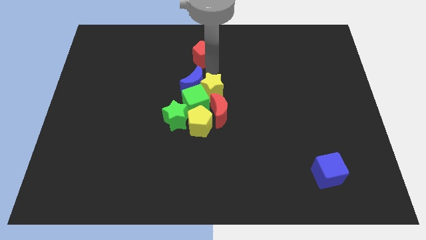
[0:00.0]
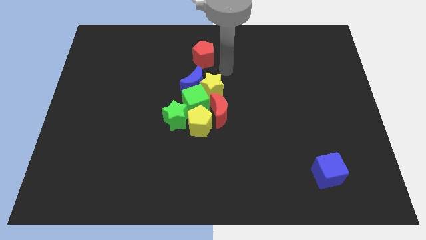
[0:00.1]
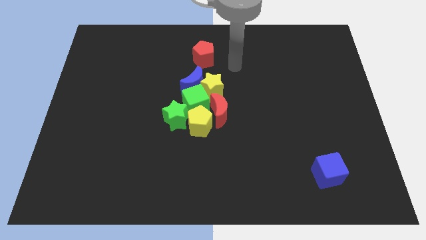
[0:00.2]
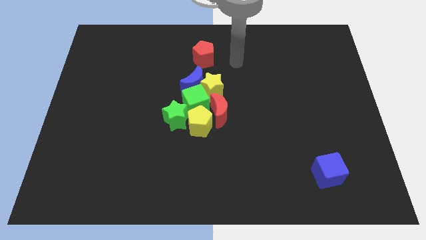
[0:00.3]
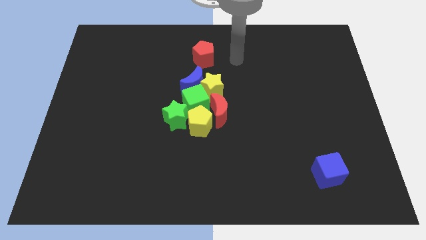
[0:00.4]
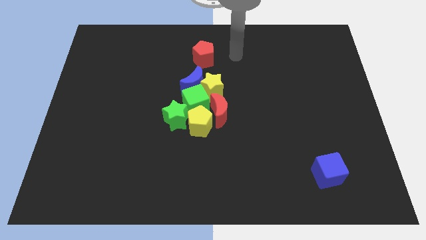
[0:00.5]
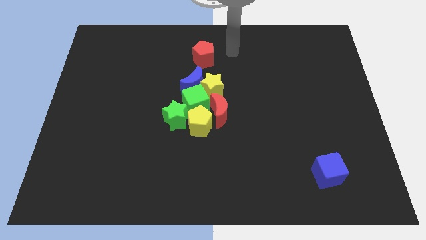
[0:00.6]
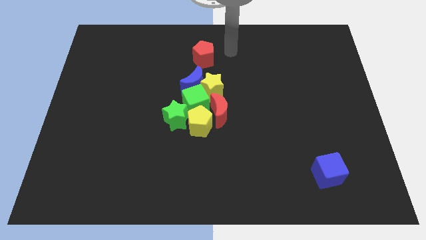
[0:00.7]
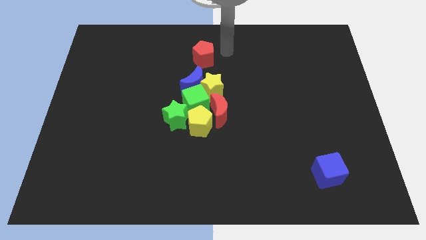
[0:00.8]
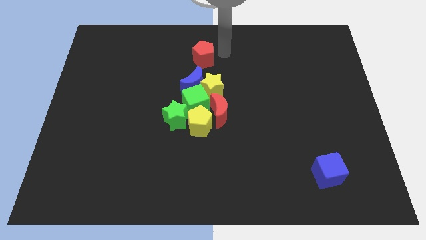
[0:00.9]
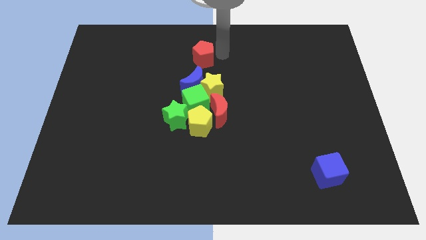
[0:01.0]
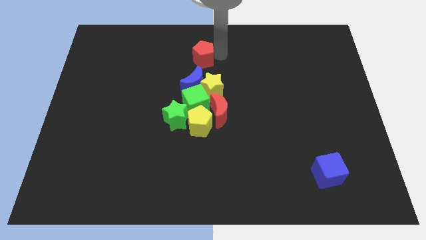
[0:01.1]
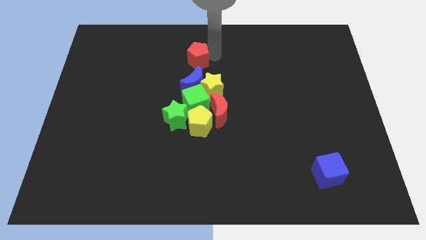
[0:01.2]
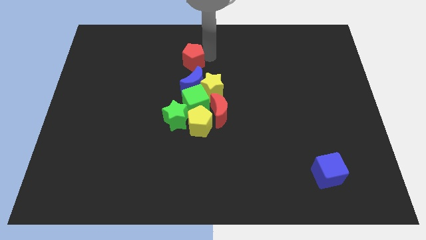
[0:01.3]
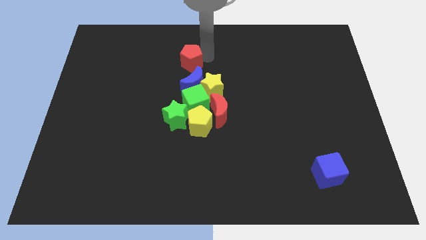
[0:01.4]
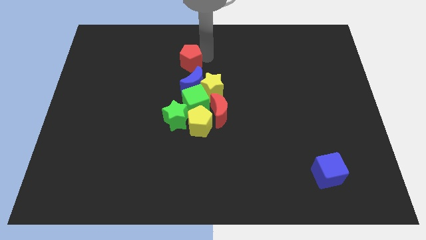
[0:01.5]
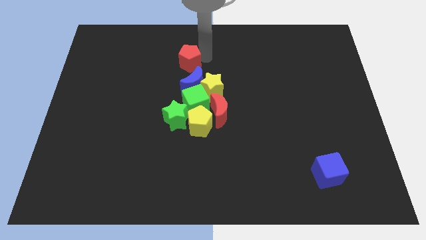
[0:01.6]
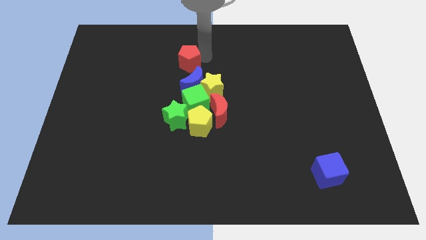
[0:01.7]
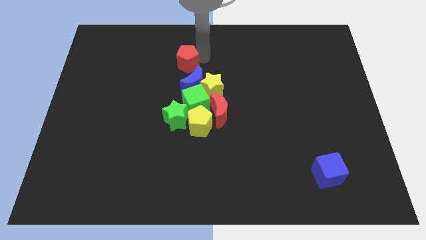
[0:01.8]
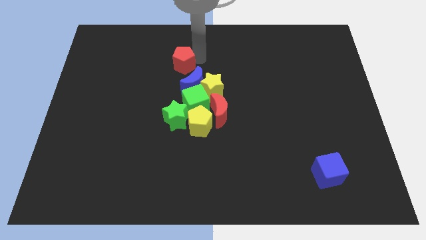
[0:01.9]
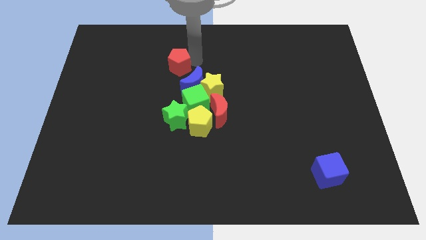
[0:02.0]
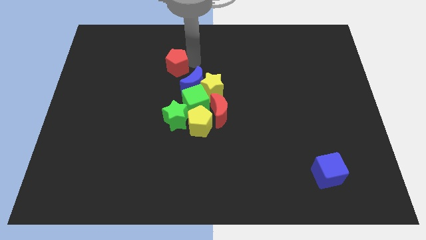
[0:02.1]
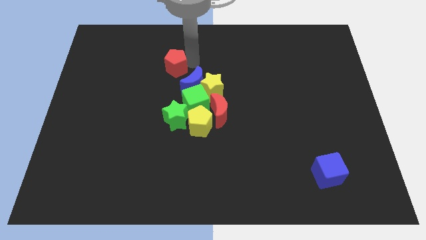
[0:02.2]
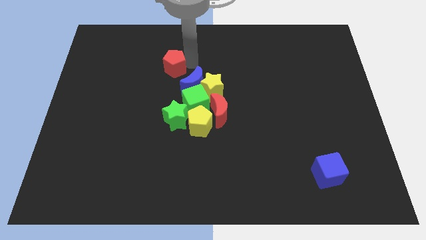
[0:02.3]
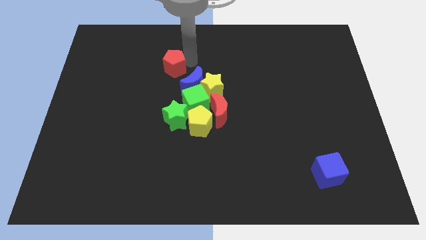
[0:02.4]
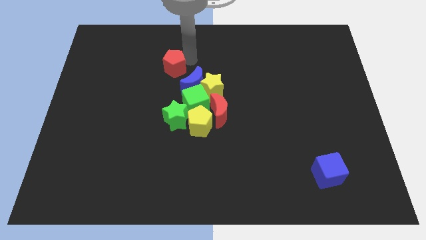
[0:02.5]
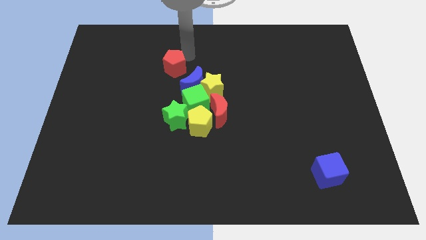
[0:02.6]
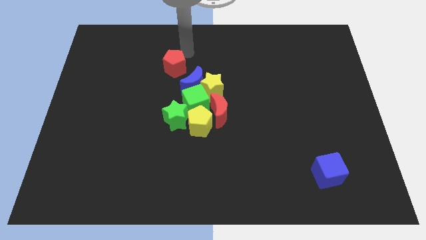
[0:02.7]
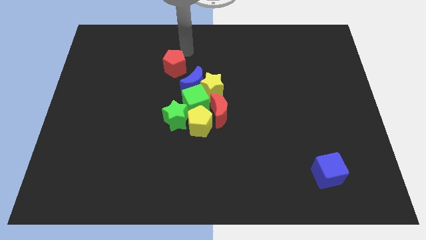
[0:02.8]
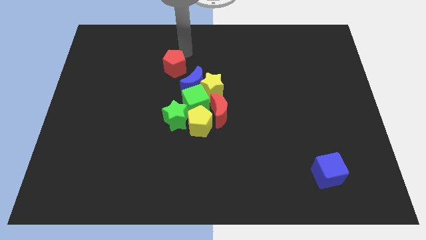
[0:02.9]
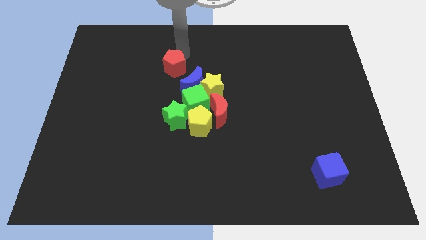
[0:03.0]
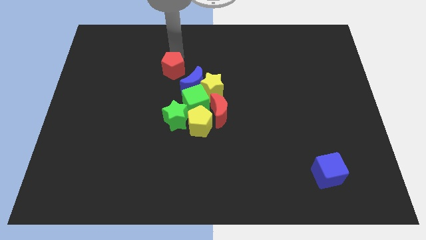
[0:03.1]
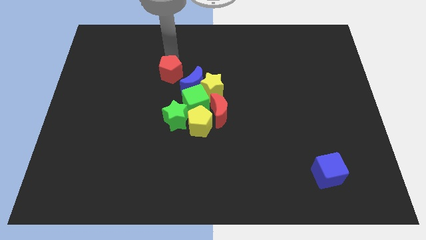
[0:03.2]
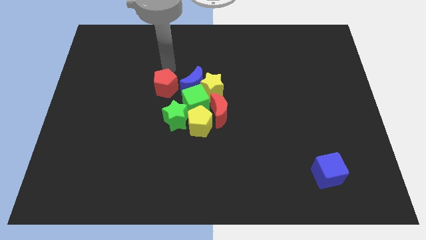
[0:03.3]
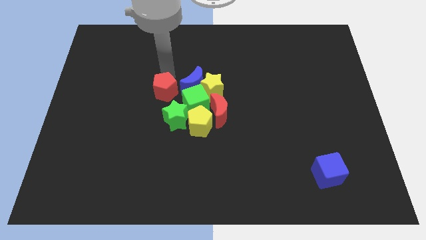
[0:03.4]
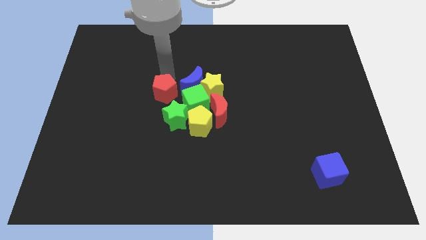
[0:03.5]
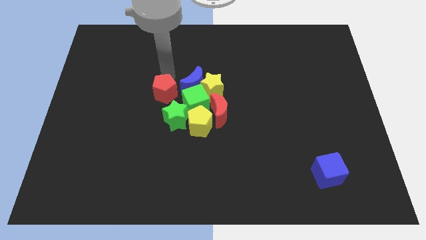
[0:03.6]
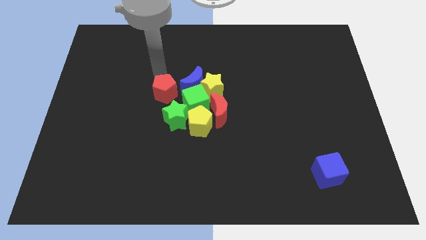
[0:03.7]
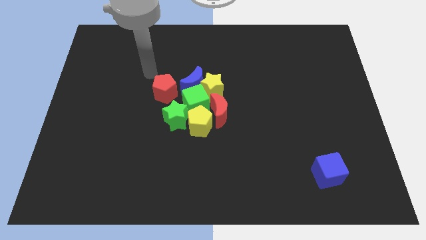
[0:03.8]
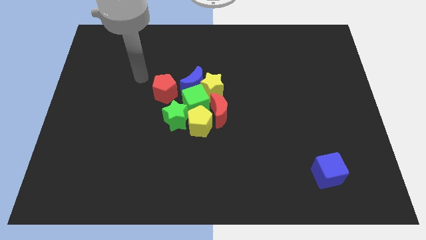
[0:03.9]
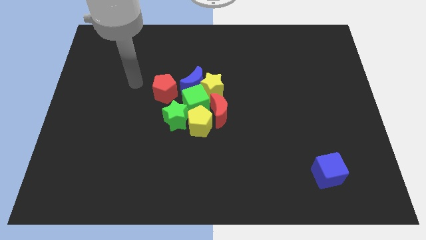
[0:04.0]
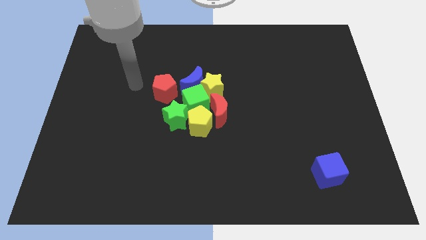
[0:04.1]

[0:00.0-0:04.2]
place the red pentagon left to the blue moon

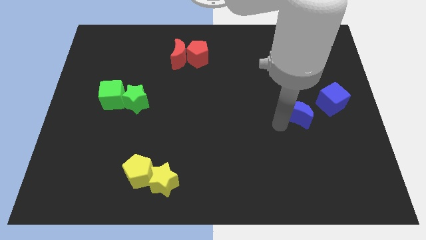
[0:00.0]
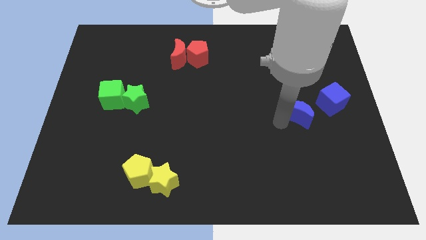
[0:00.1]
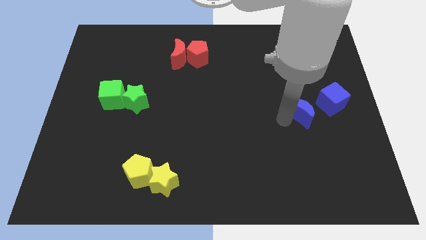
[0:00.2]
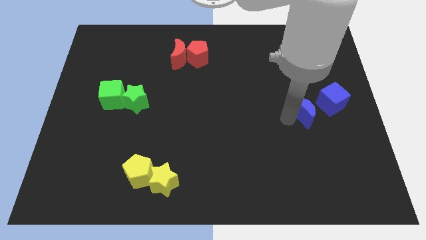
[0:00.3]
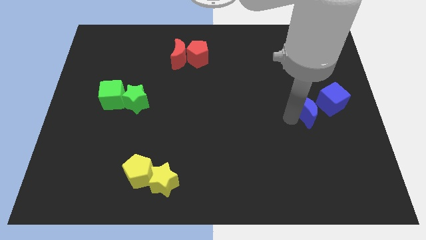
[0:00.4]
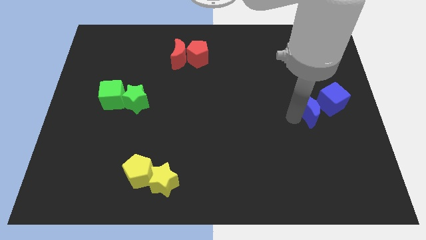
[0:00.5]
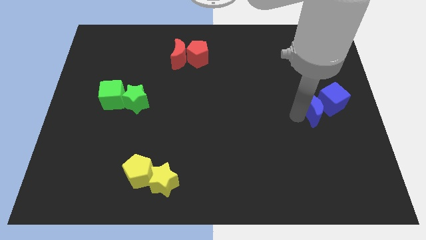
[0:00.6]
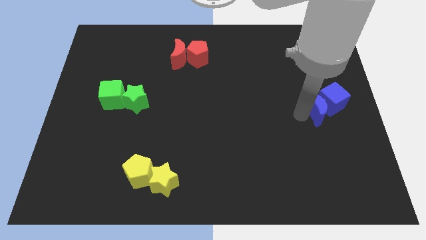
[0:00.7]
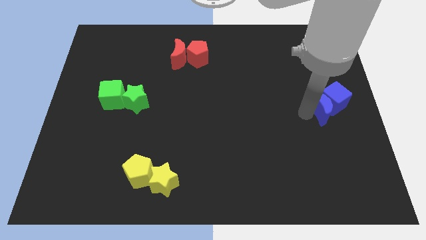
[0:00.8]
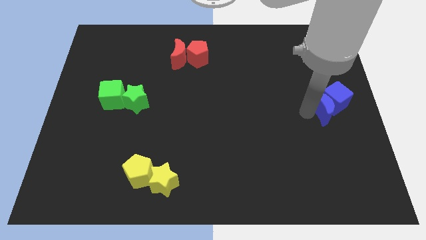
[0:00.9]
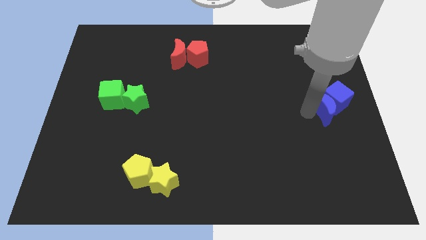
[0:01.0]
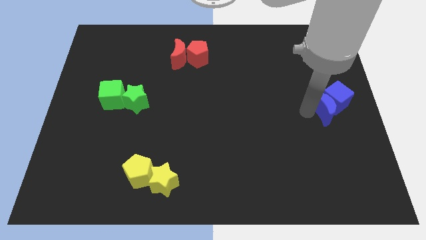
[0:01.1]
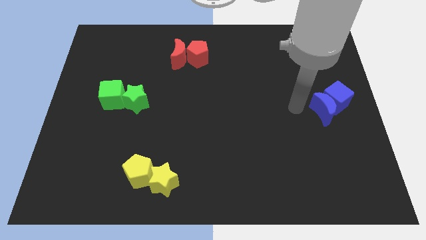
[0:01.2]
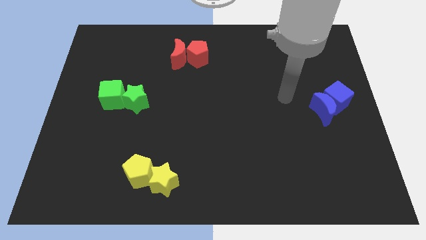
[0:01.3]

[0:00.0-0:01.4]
move the blue crescent to the left of the blue cube

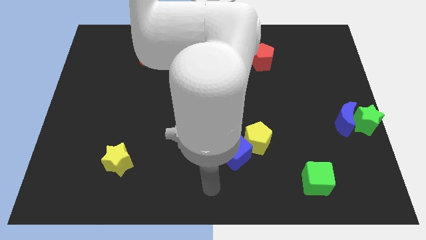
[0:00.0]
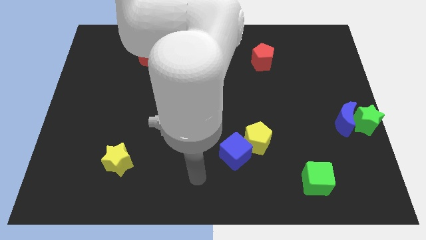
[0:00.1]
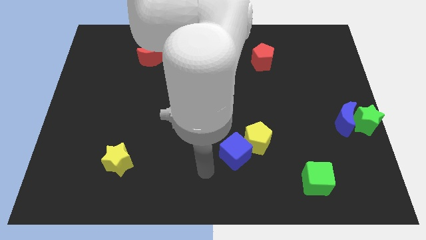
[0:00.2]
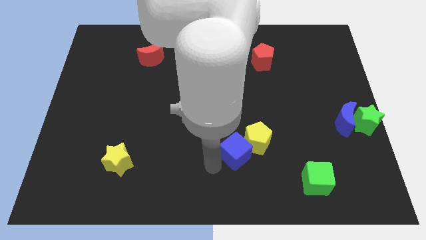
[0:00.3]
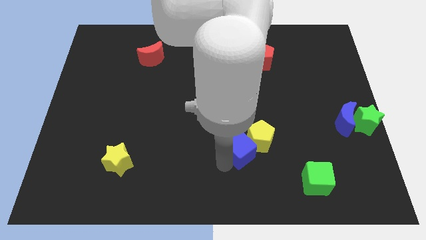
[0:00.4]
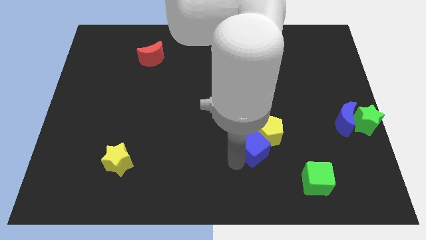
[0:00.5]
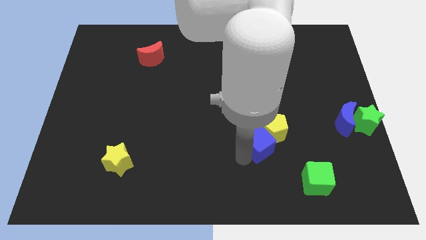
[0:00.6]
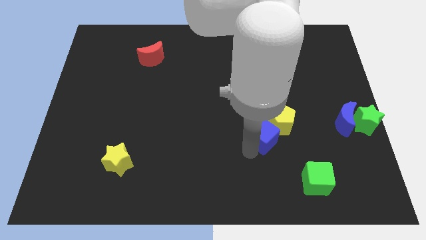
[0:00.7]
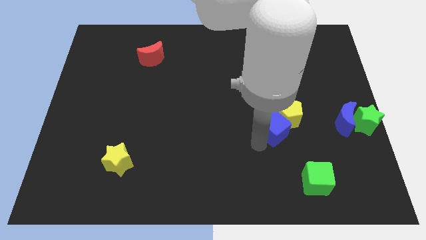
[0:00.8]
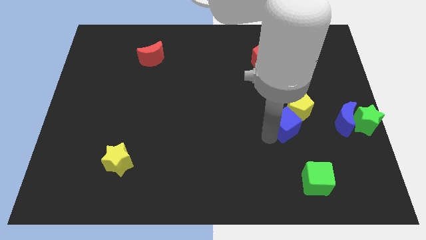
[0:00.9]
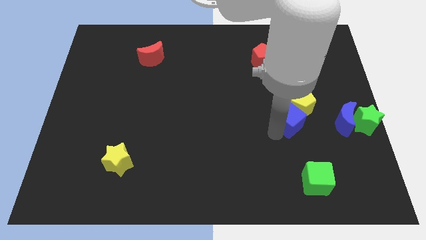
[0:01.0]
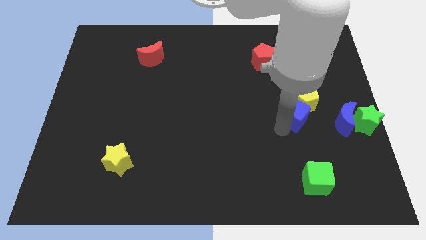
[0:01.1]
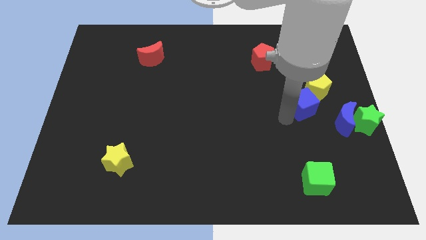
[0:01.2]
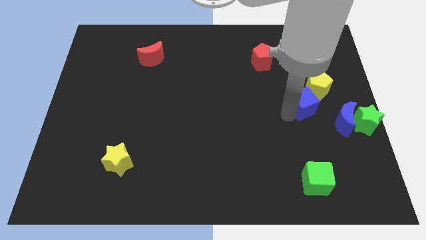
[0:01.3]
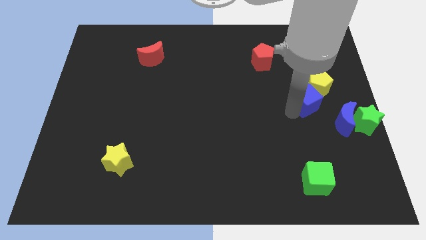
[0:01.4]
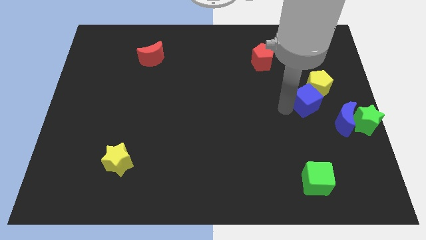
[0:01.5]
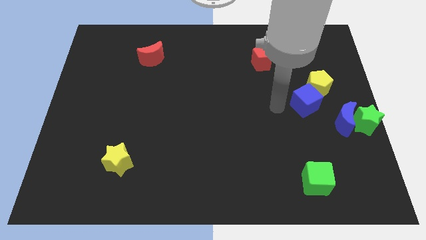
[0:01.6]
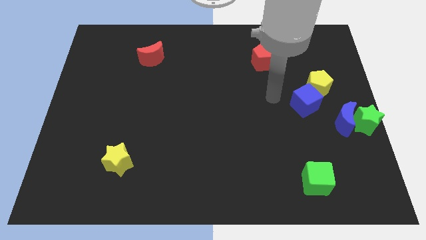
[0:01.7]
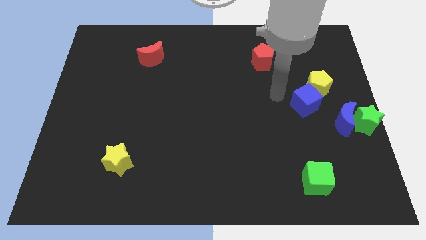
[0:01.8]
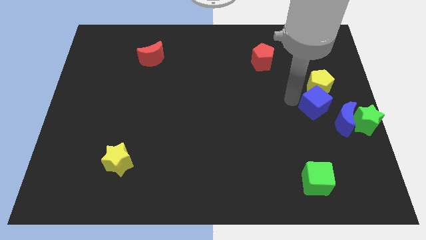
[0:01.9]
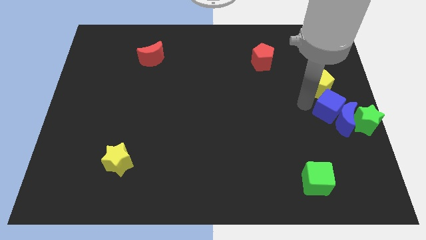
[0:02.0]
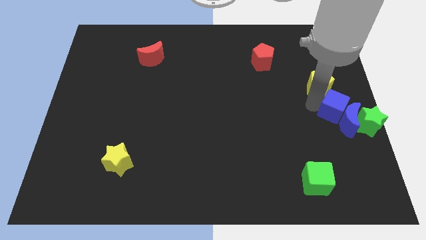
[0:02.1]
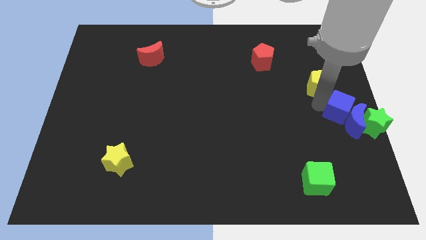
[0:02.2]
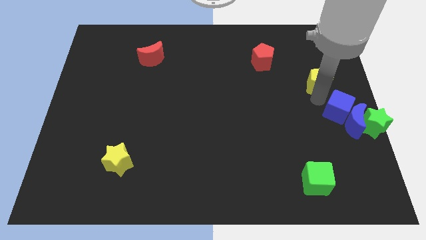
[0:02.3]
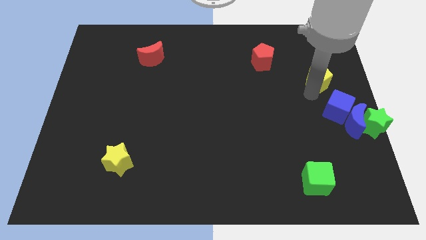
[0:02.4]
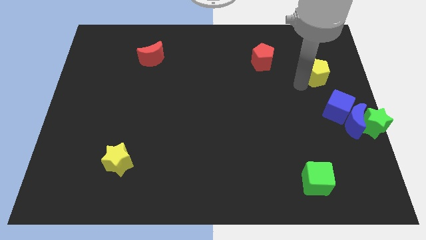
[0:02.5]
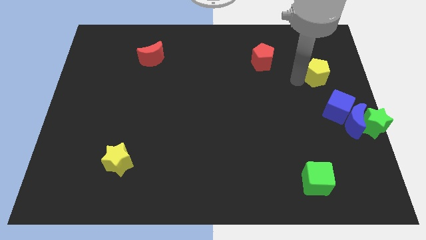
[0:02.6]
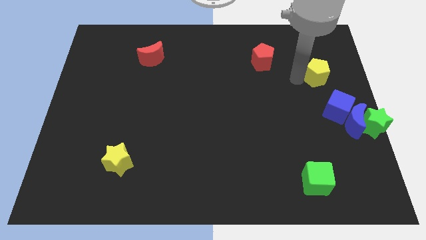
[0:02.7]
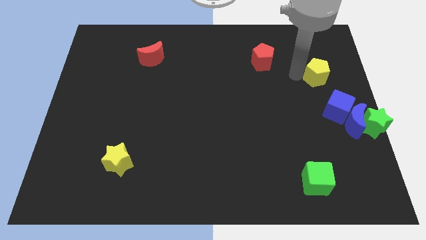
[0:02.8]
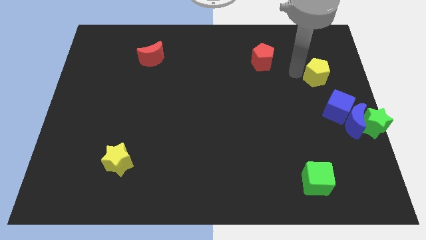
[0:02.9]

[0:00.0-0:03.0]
push blue cube towards blue crescent

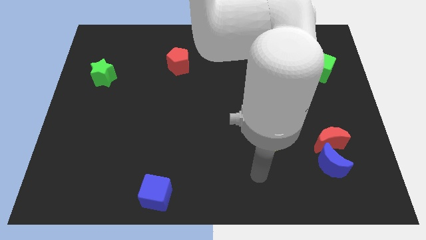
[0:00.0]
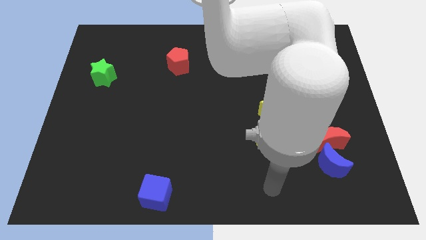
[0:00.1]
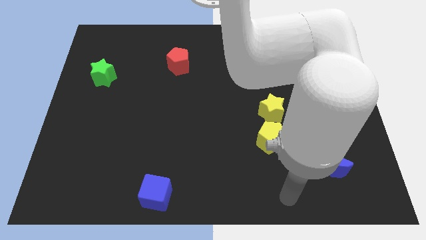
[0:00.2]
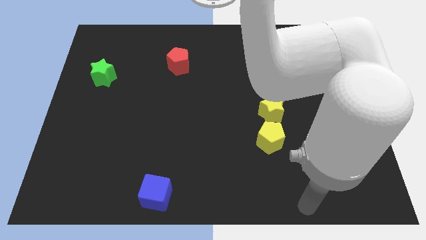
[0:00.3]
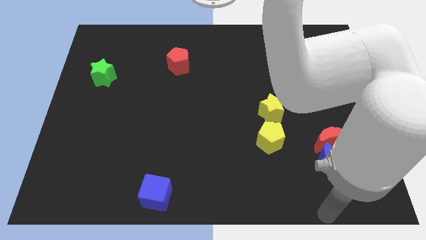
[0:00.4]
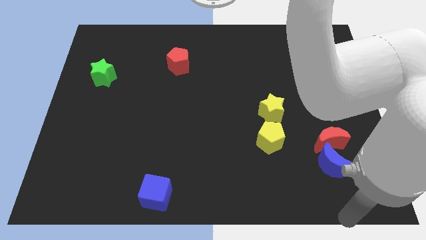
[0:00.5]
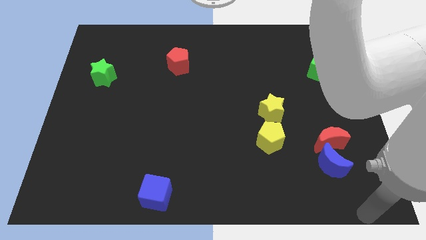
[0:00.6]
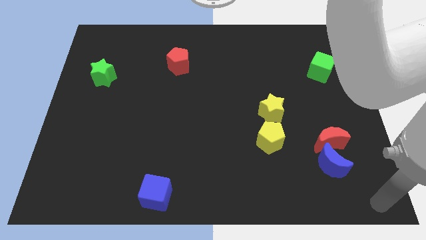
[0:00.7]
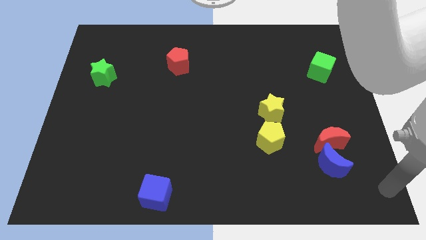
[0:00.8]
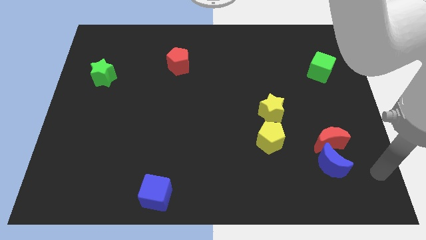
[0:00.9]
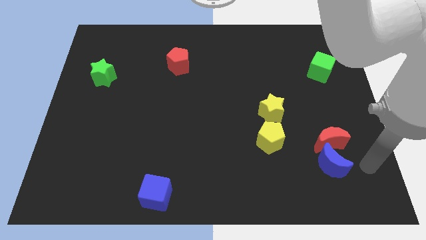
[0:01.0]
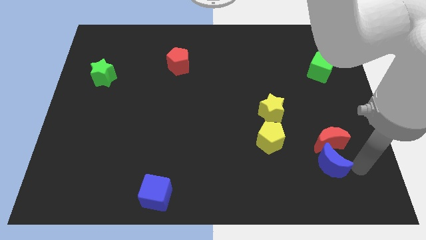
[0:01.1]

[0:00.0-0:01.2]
move your hand towards the blue crescent
